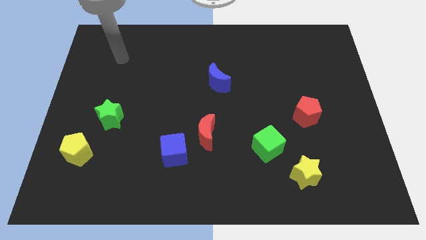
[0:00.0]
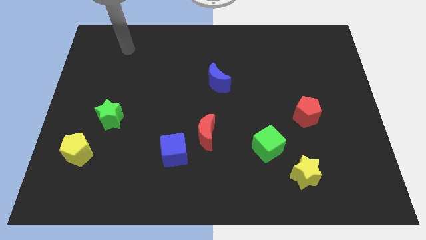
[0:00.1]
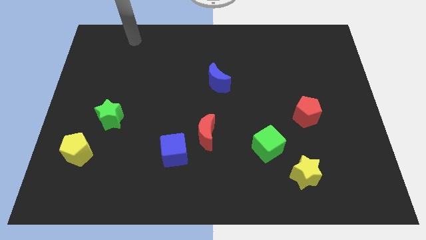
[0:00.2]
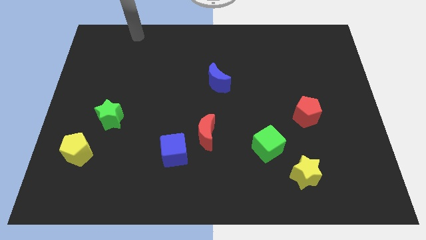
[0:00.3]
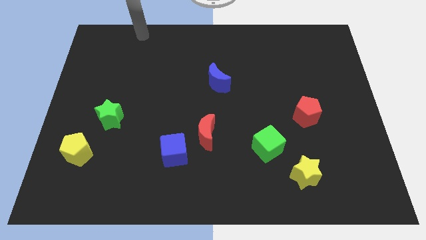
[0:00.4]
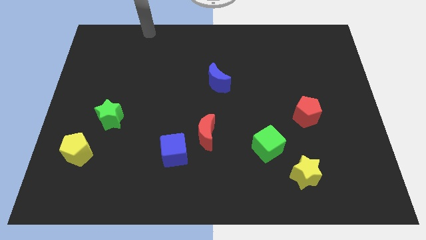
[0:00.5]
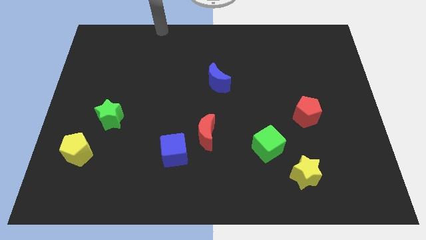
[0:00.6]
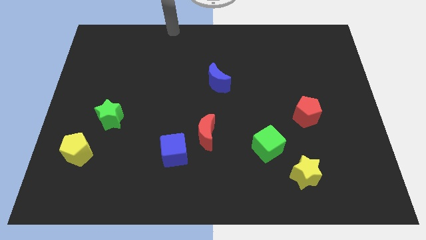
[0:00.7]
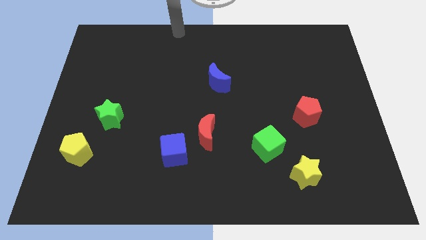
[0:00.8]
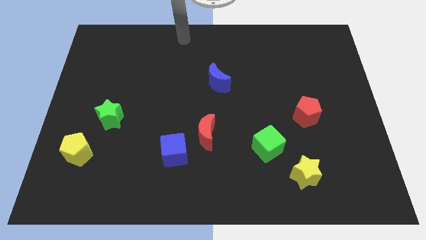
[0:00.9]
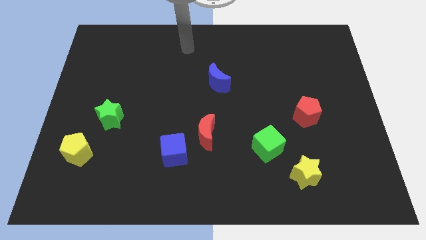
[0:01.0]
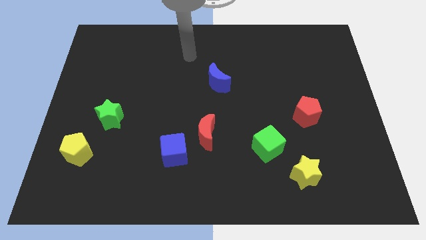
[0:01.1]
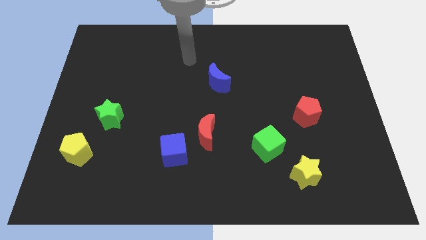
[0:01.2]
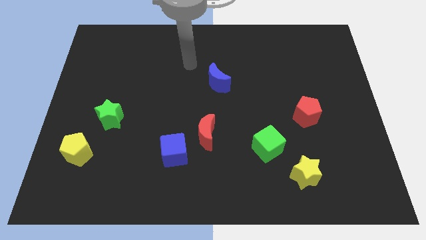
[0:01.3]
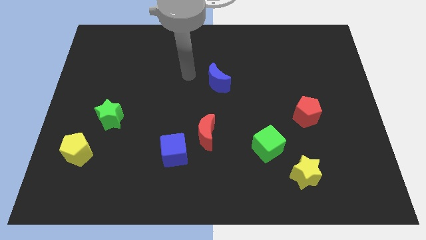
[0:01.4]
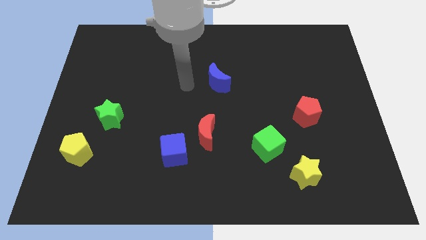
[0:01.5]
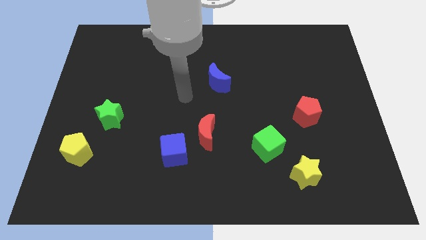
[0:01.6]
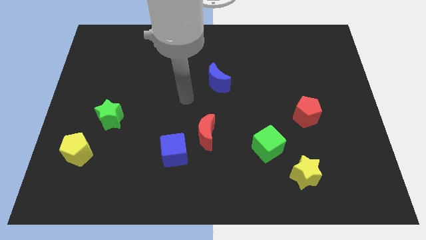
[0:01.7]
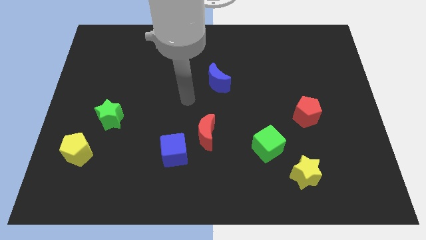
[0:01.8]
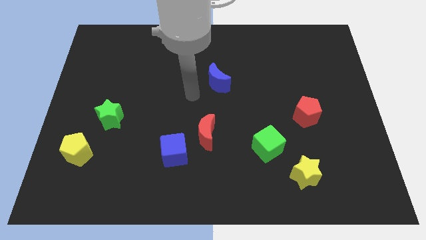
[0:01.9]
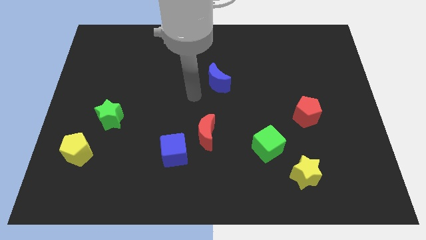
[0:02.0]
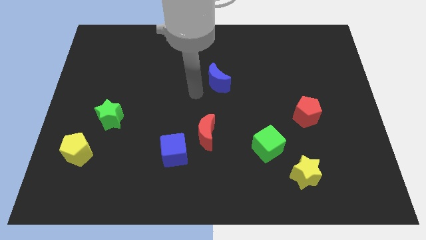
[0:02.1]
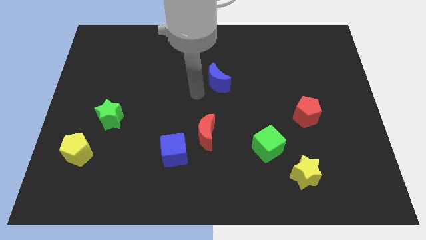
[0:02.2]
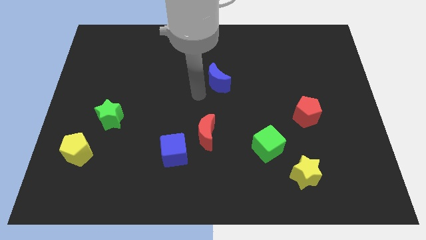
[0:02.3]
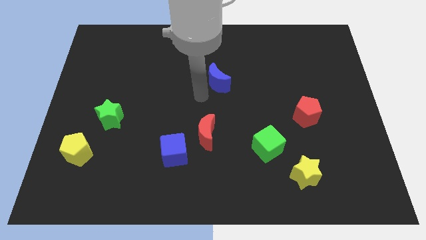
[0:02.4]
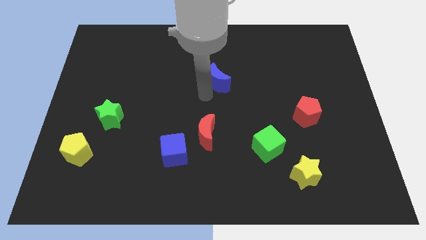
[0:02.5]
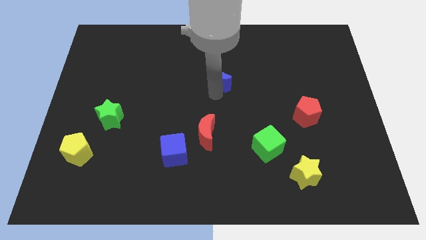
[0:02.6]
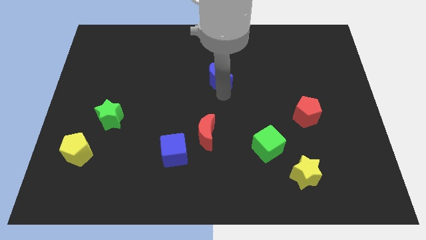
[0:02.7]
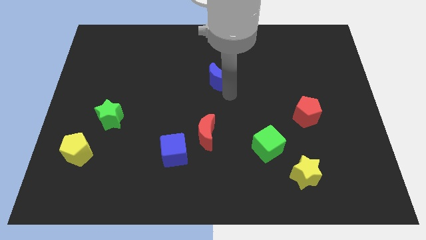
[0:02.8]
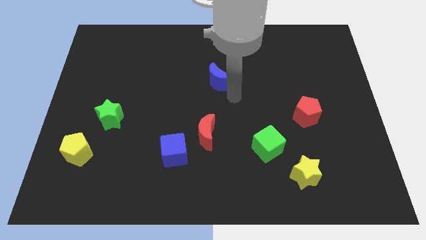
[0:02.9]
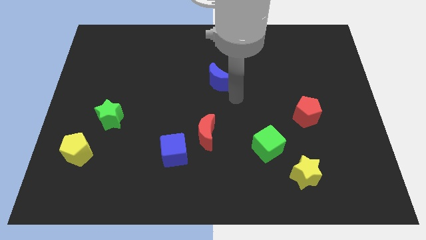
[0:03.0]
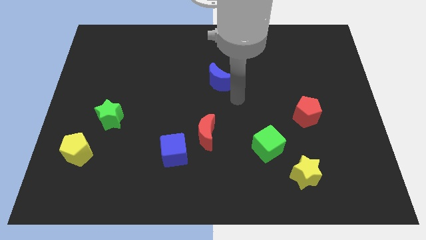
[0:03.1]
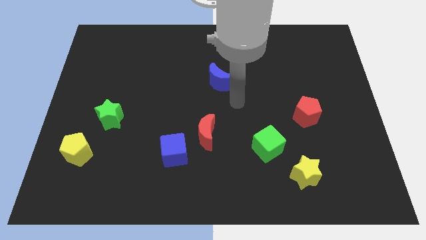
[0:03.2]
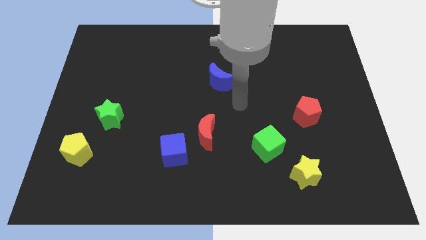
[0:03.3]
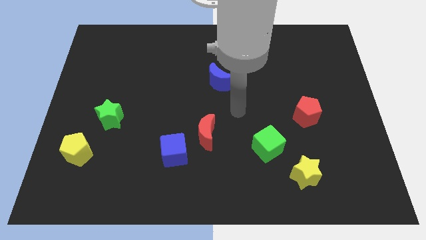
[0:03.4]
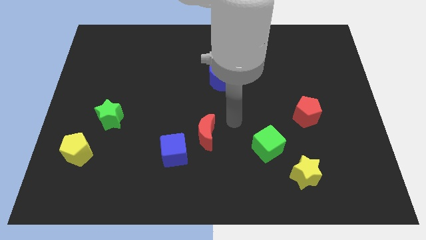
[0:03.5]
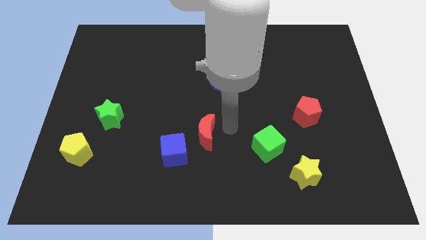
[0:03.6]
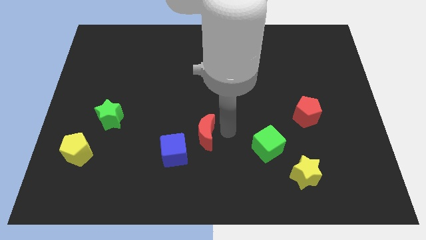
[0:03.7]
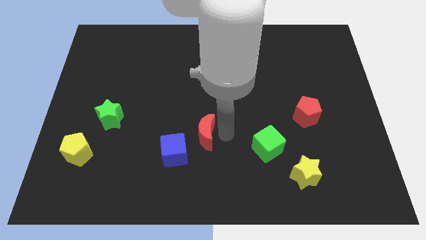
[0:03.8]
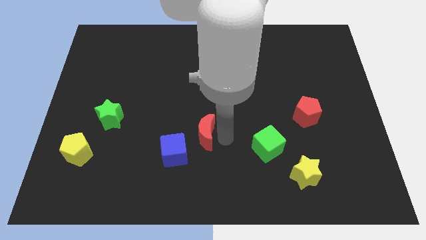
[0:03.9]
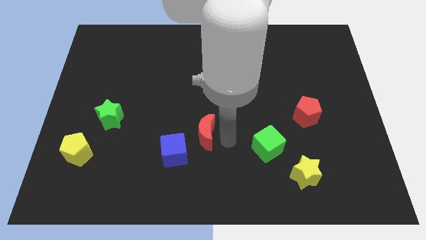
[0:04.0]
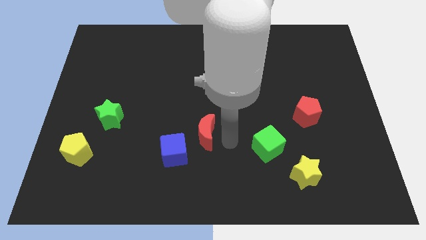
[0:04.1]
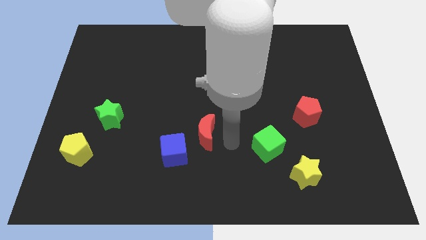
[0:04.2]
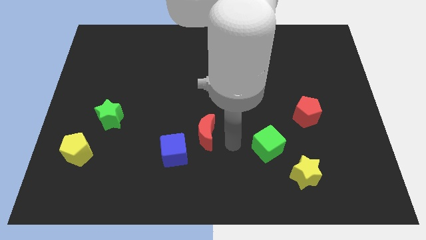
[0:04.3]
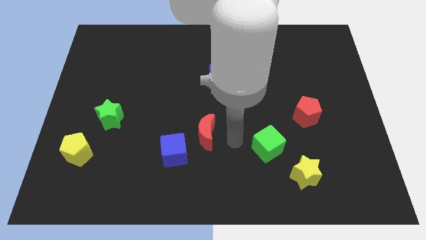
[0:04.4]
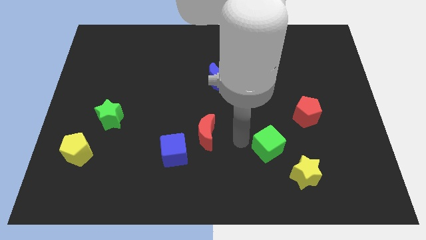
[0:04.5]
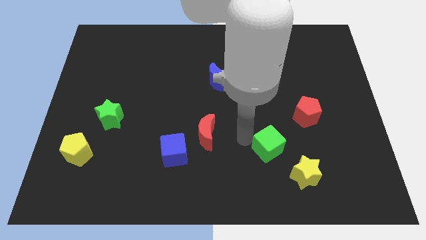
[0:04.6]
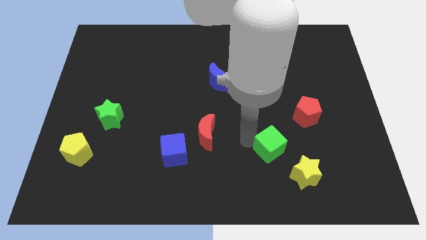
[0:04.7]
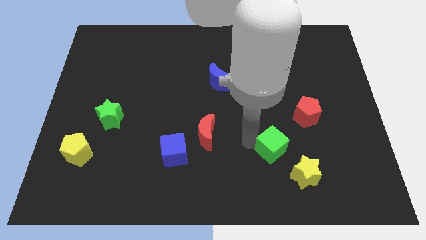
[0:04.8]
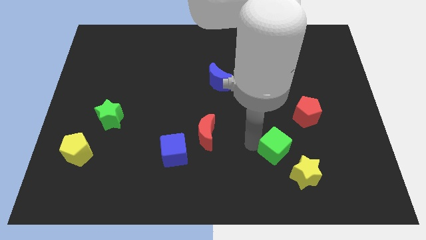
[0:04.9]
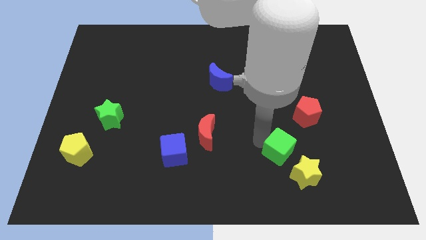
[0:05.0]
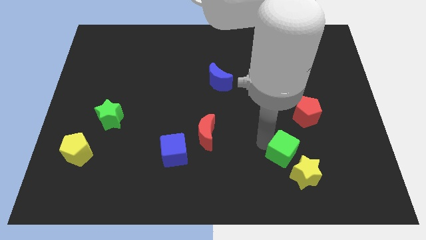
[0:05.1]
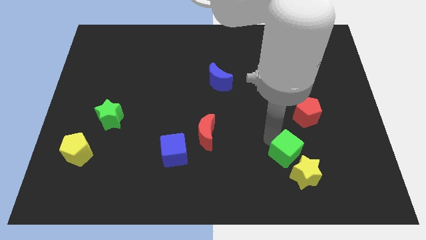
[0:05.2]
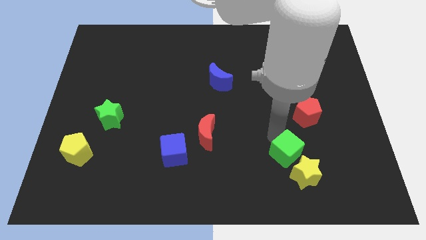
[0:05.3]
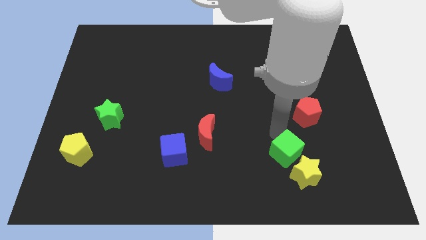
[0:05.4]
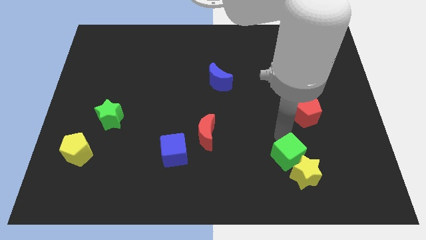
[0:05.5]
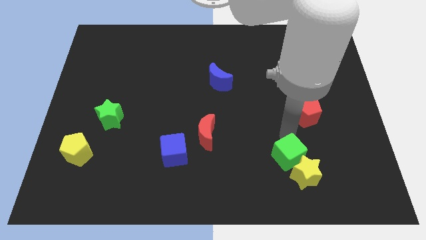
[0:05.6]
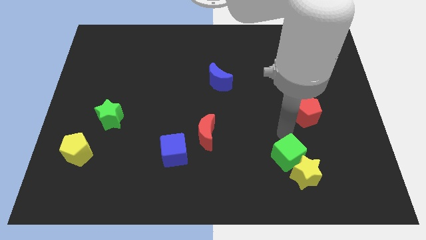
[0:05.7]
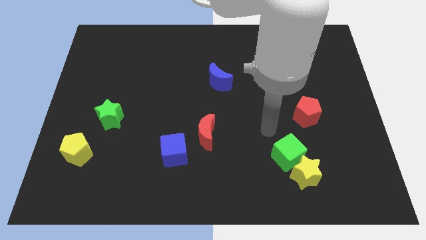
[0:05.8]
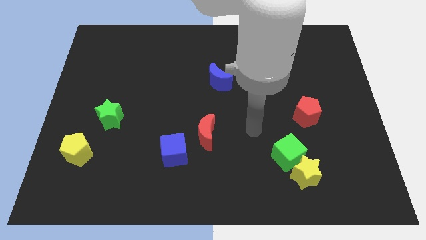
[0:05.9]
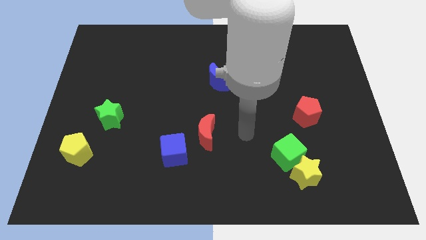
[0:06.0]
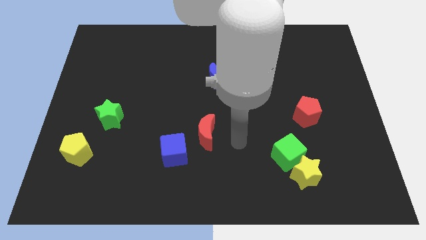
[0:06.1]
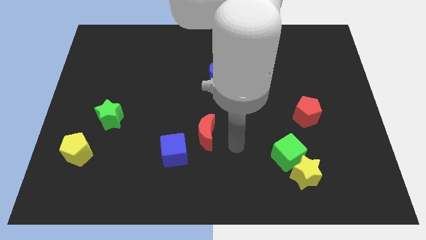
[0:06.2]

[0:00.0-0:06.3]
move the green cube above the yellow star

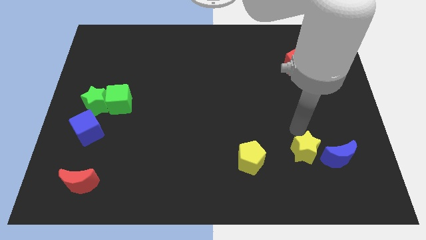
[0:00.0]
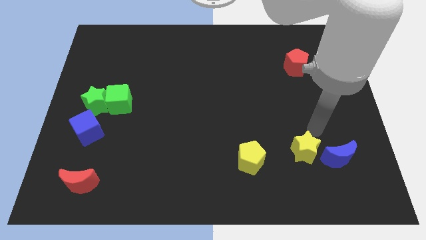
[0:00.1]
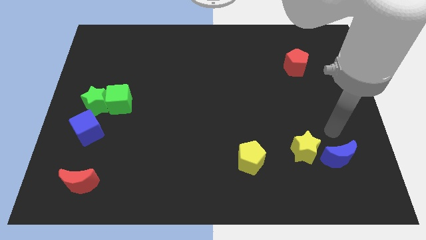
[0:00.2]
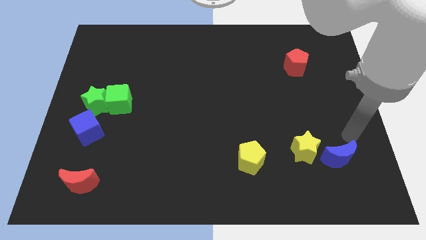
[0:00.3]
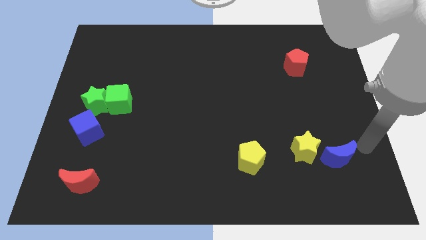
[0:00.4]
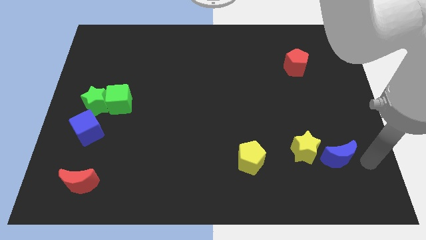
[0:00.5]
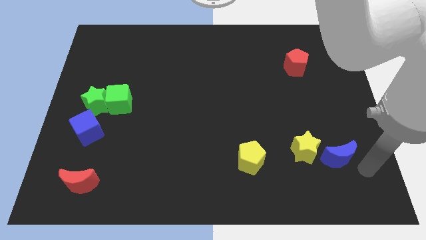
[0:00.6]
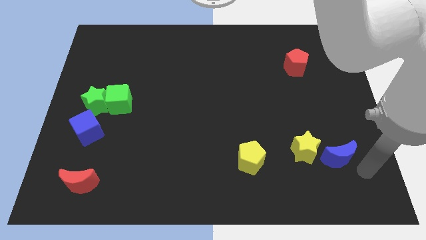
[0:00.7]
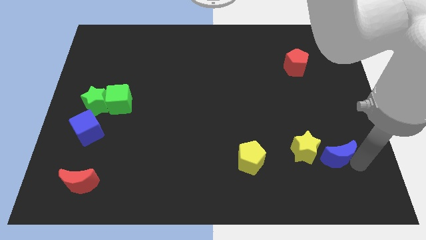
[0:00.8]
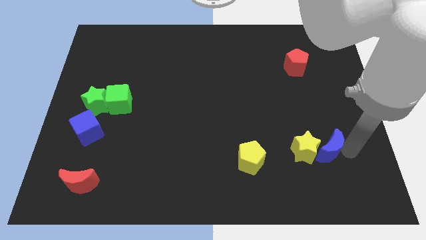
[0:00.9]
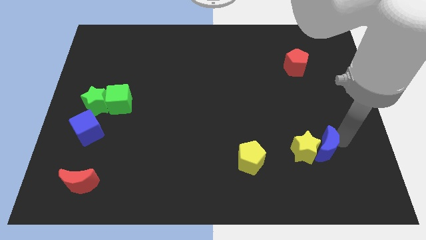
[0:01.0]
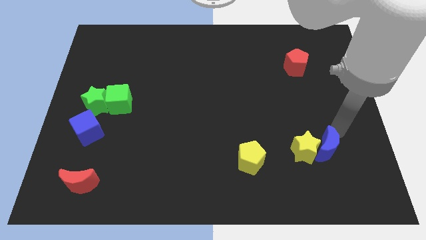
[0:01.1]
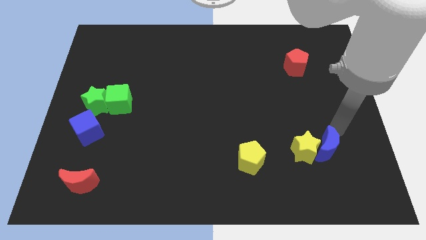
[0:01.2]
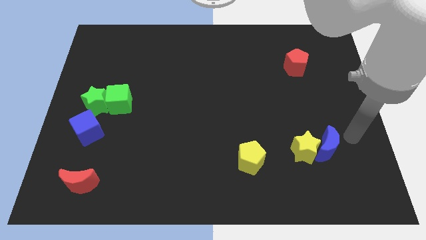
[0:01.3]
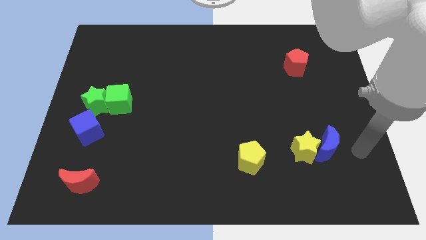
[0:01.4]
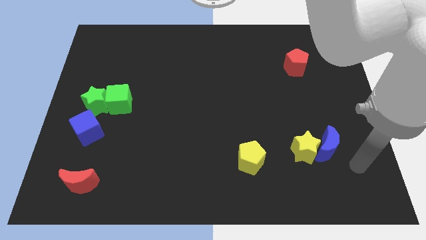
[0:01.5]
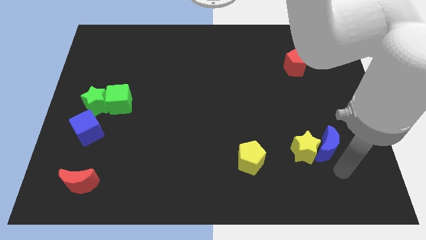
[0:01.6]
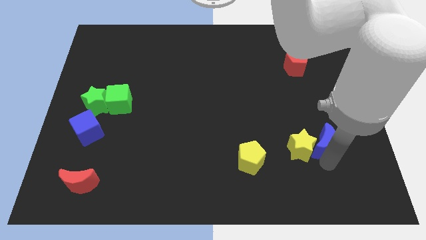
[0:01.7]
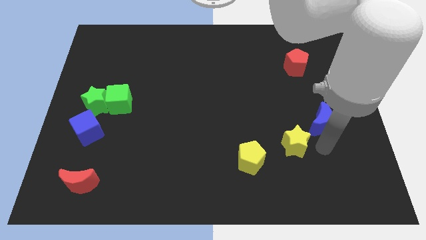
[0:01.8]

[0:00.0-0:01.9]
move the blue moon into the yellow star

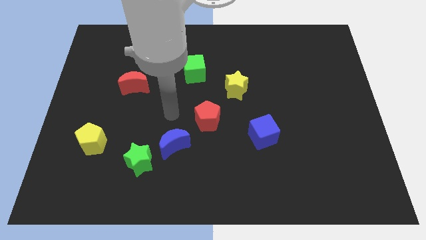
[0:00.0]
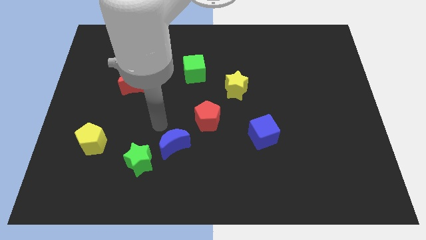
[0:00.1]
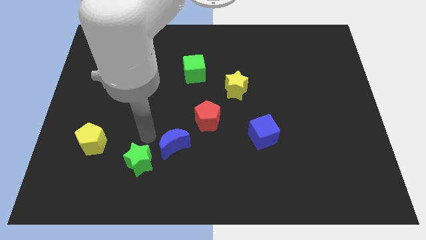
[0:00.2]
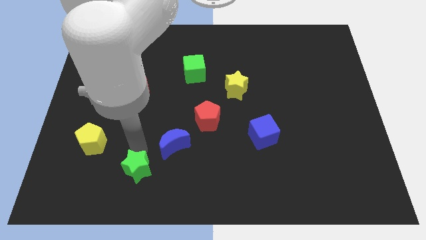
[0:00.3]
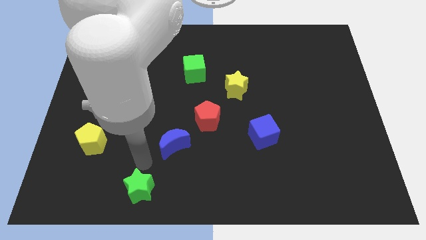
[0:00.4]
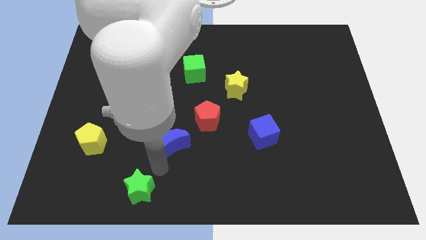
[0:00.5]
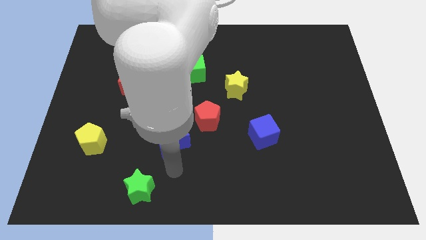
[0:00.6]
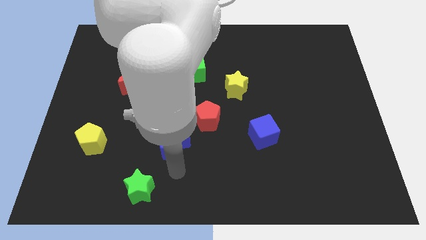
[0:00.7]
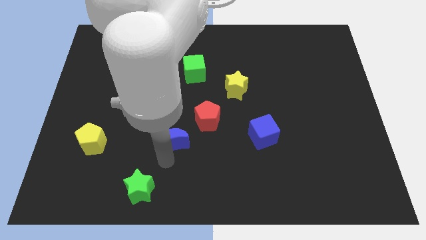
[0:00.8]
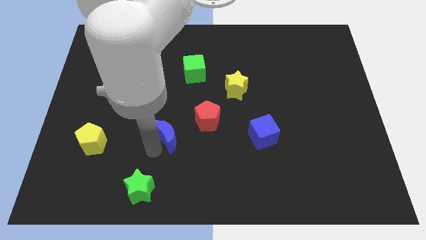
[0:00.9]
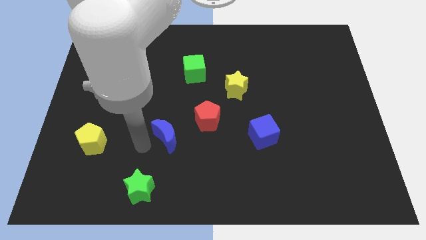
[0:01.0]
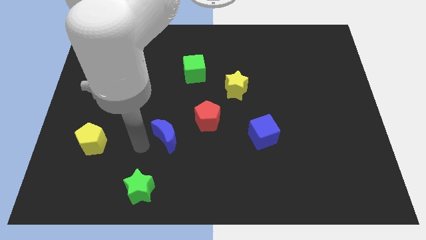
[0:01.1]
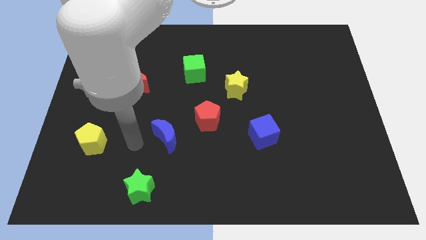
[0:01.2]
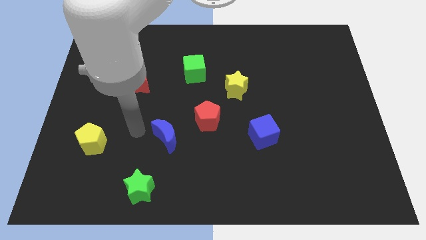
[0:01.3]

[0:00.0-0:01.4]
move the green star slightly downwards
